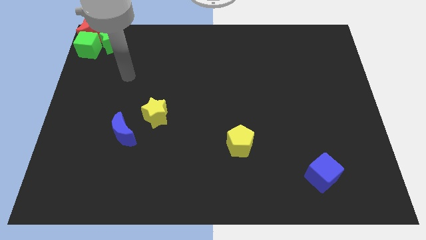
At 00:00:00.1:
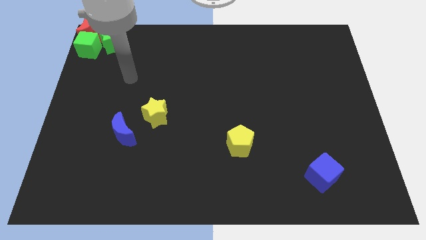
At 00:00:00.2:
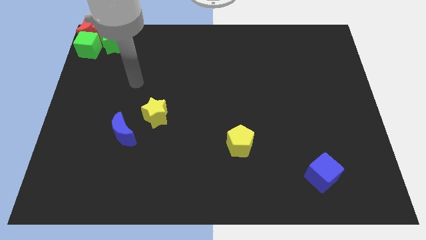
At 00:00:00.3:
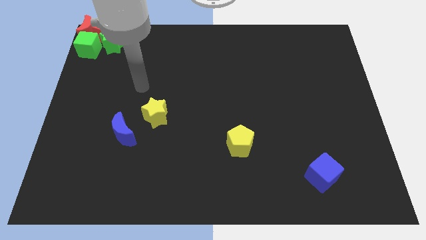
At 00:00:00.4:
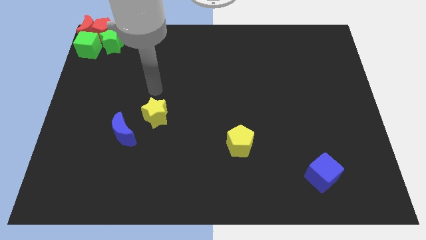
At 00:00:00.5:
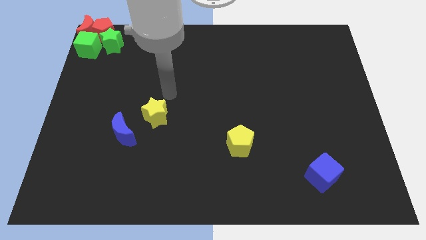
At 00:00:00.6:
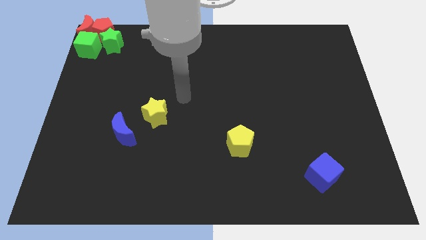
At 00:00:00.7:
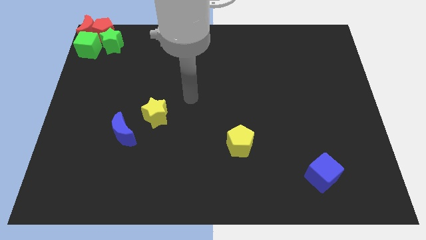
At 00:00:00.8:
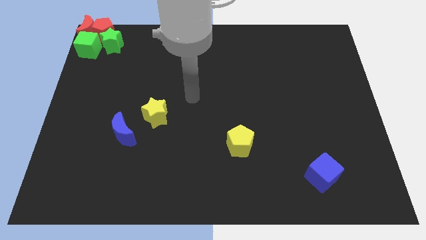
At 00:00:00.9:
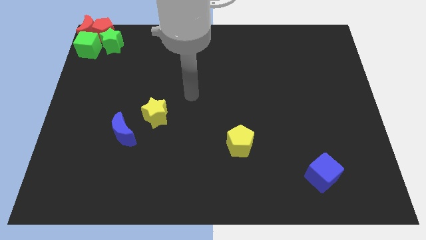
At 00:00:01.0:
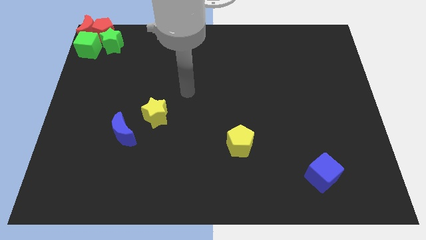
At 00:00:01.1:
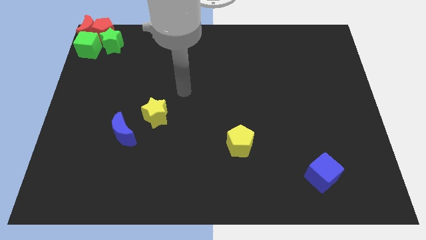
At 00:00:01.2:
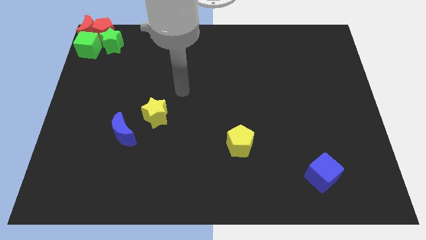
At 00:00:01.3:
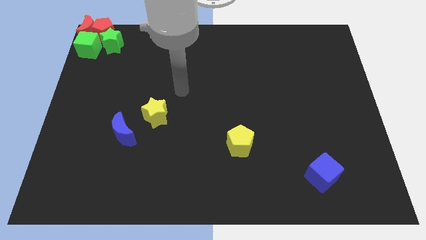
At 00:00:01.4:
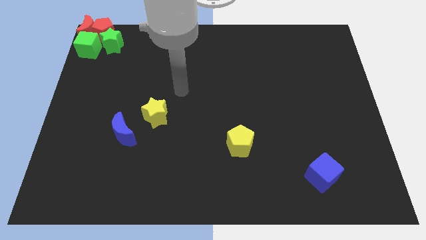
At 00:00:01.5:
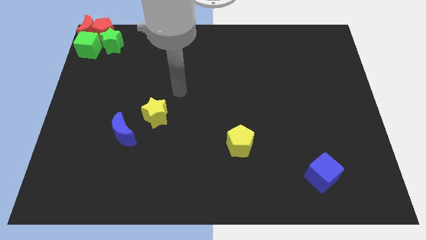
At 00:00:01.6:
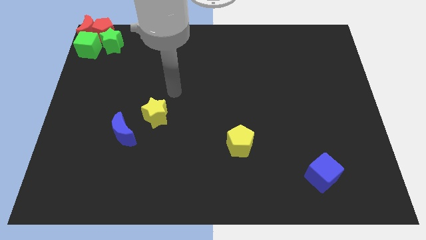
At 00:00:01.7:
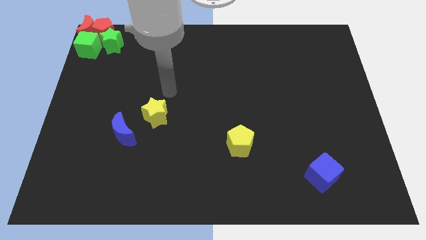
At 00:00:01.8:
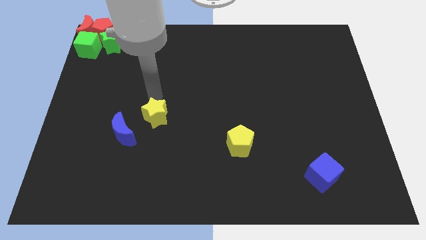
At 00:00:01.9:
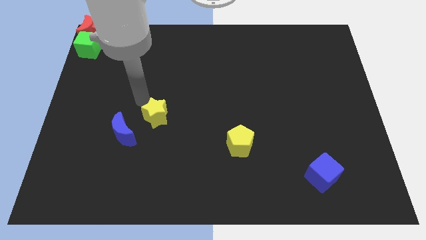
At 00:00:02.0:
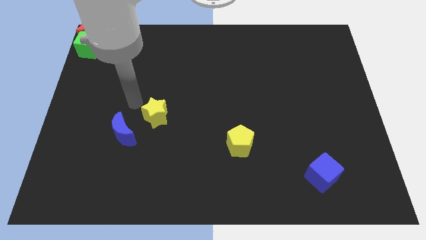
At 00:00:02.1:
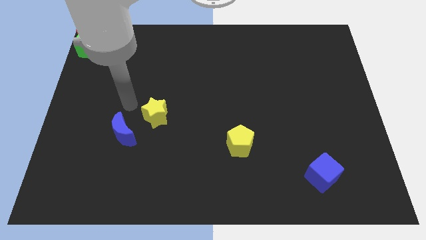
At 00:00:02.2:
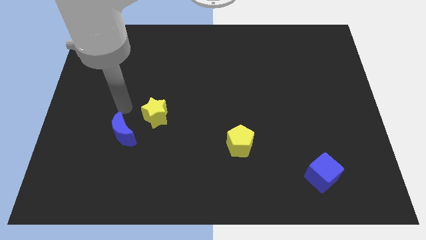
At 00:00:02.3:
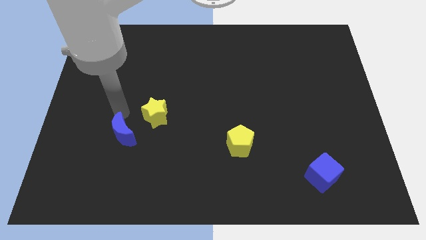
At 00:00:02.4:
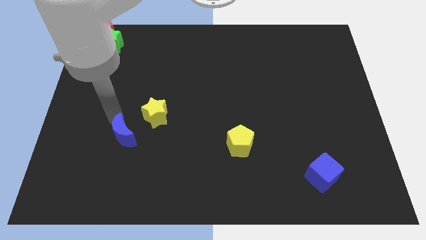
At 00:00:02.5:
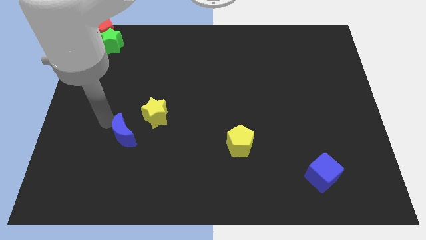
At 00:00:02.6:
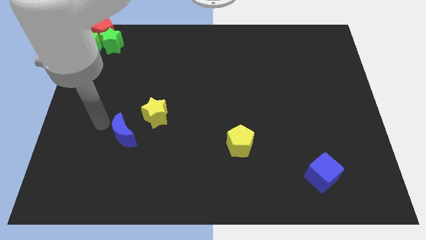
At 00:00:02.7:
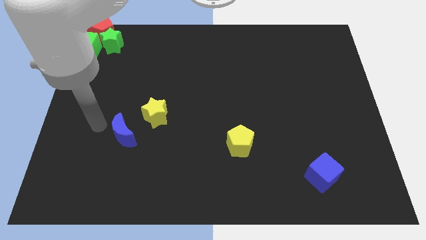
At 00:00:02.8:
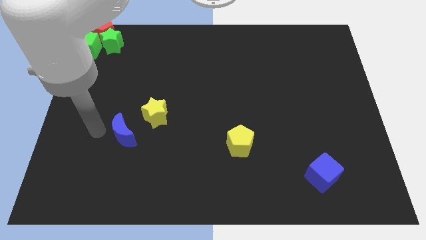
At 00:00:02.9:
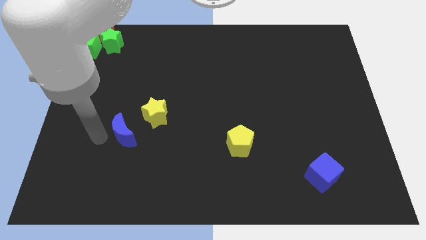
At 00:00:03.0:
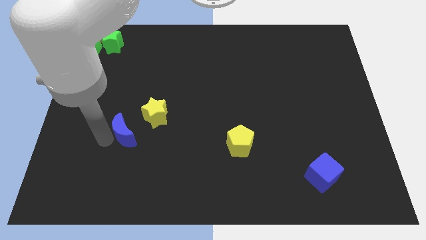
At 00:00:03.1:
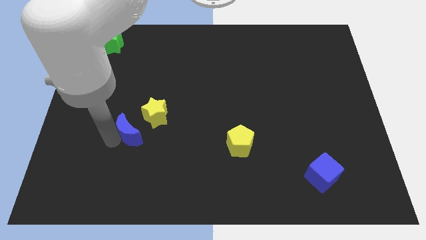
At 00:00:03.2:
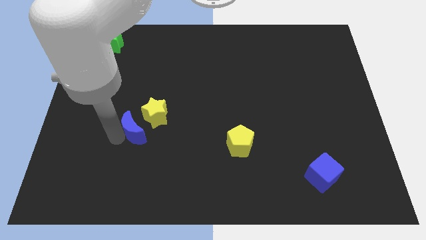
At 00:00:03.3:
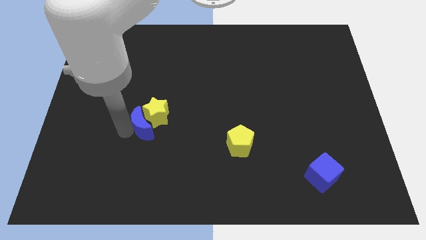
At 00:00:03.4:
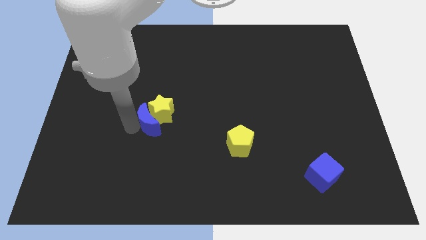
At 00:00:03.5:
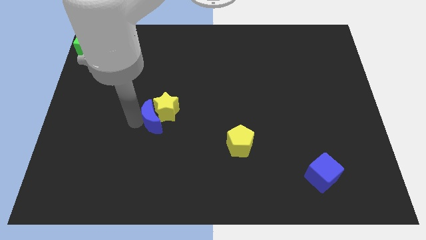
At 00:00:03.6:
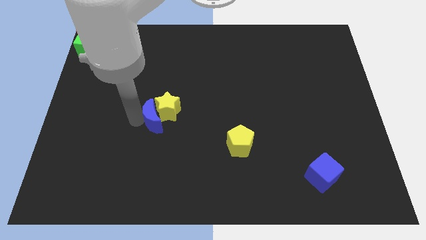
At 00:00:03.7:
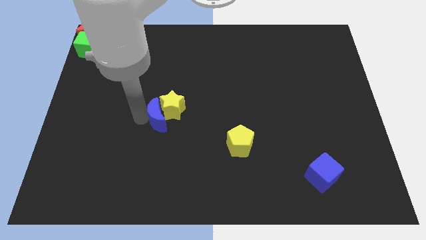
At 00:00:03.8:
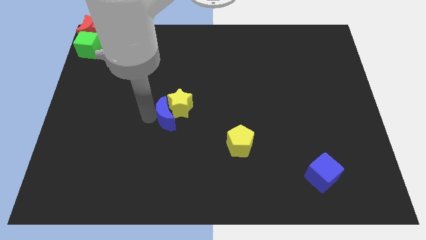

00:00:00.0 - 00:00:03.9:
slide the blue moon into the yellow star

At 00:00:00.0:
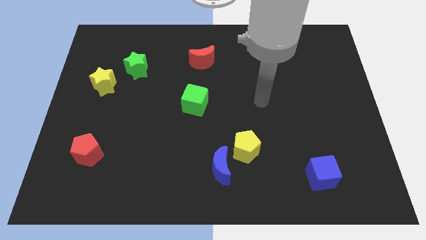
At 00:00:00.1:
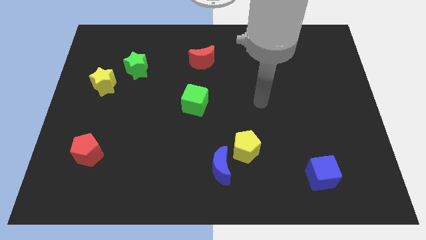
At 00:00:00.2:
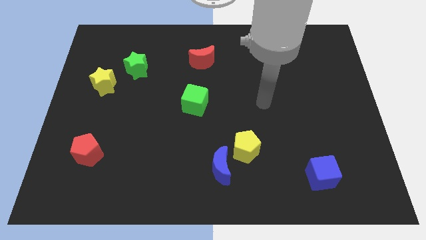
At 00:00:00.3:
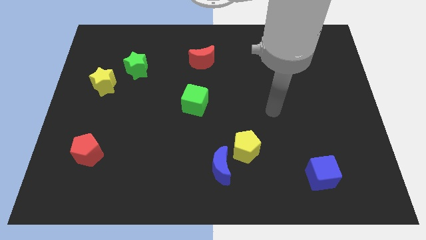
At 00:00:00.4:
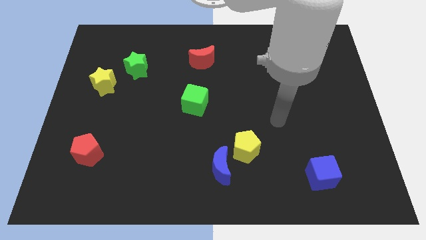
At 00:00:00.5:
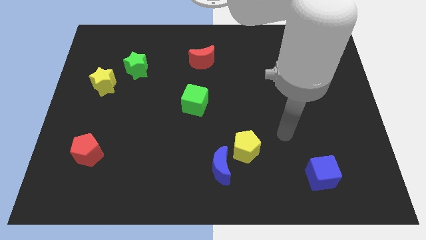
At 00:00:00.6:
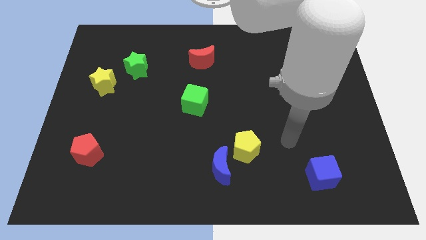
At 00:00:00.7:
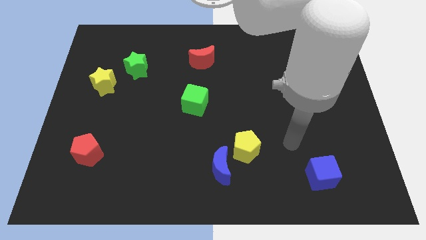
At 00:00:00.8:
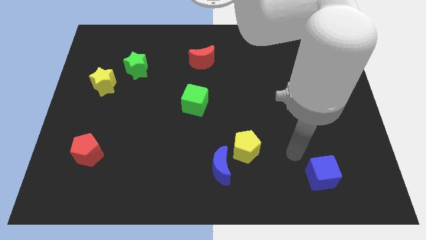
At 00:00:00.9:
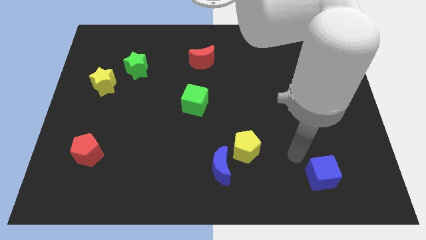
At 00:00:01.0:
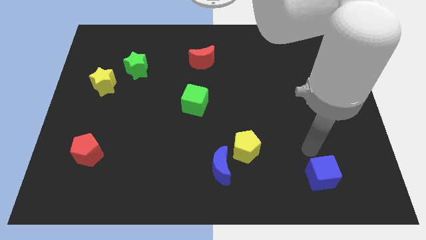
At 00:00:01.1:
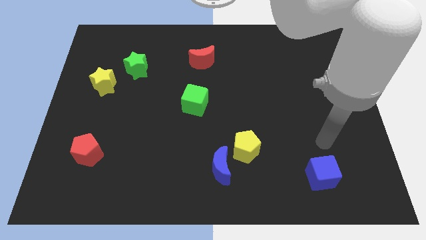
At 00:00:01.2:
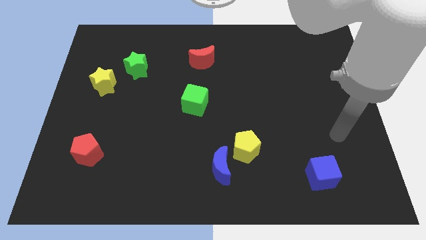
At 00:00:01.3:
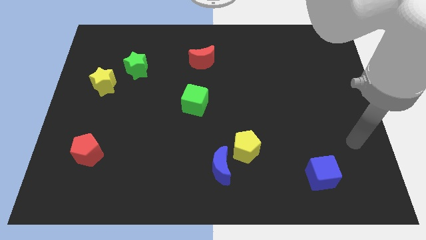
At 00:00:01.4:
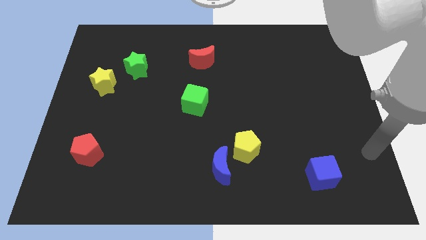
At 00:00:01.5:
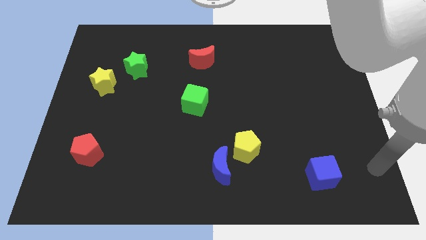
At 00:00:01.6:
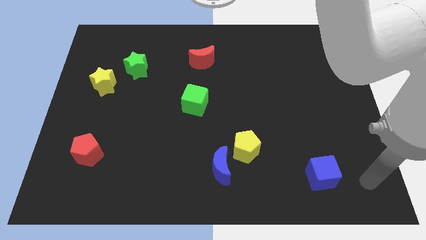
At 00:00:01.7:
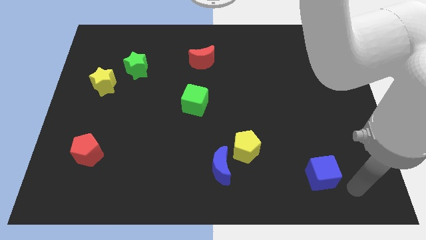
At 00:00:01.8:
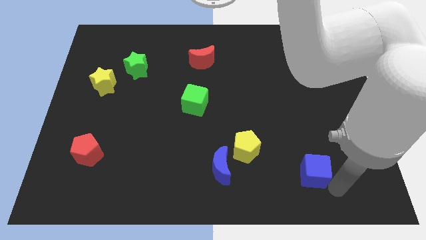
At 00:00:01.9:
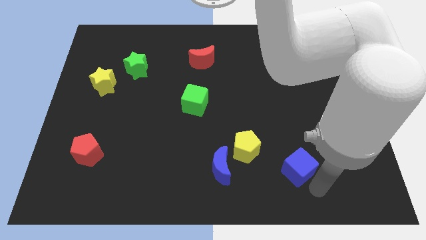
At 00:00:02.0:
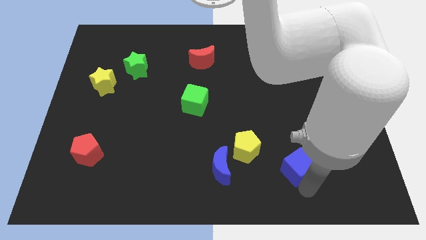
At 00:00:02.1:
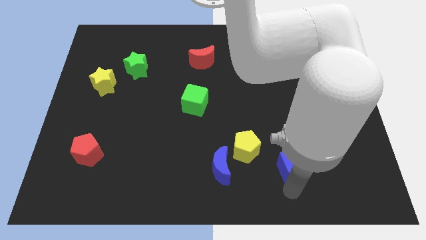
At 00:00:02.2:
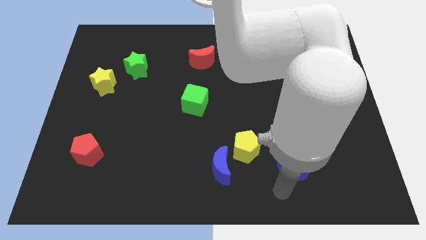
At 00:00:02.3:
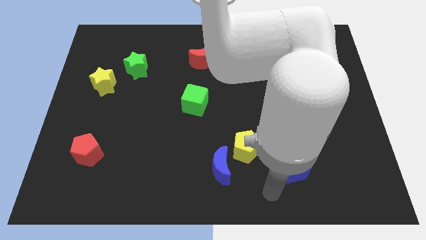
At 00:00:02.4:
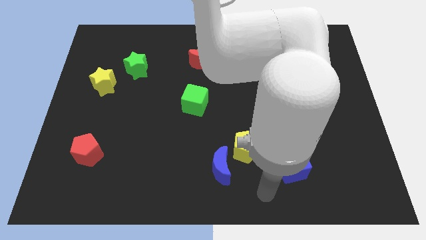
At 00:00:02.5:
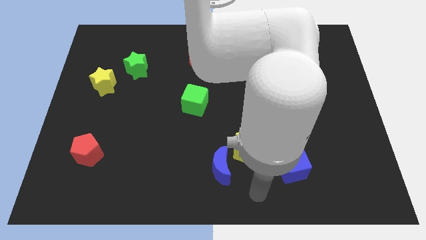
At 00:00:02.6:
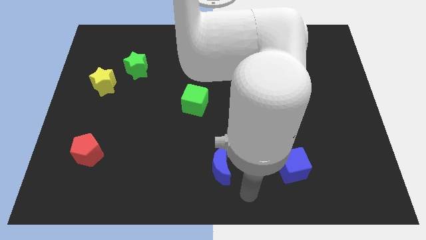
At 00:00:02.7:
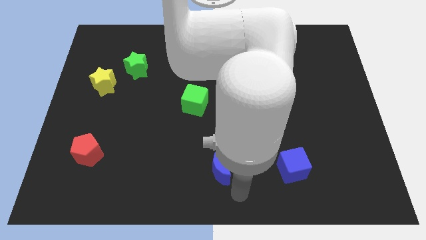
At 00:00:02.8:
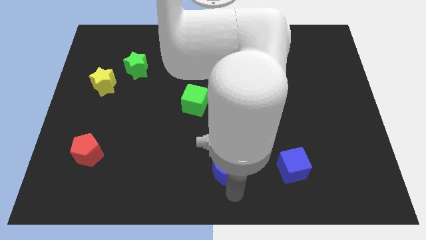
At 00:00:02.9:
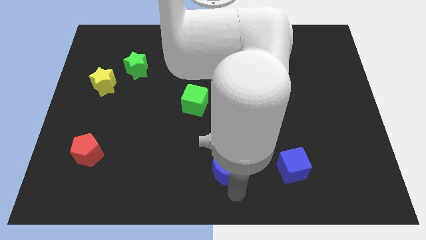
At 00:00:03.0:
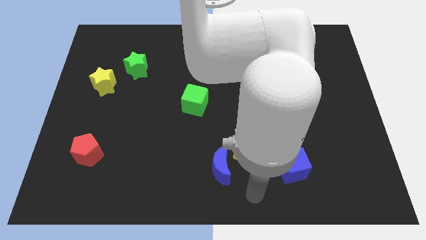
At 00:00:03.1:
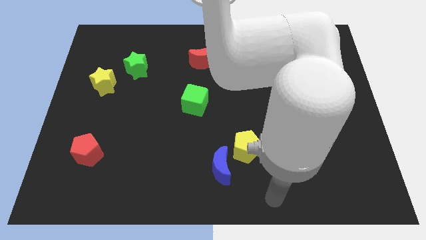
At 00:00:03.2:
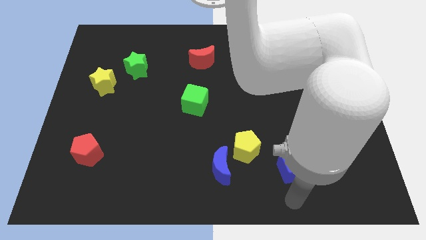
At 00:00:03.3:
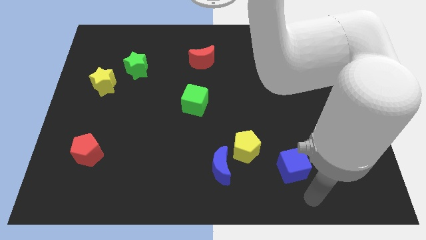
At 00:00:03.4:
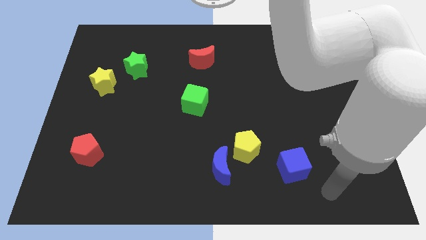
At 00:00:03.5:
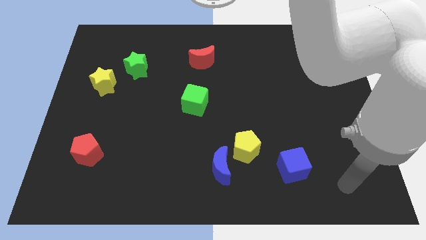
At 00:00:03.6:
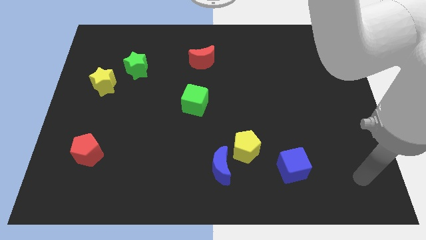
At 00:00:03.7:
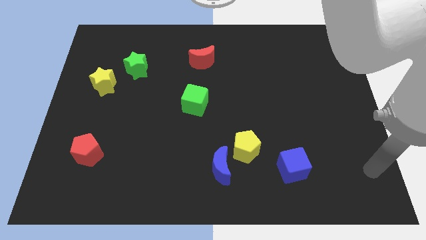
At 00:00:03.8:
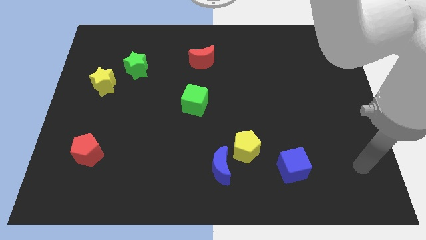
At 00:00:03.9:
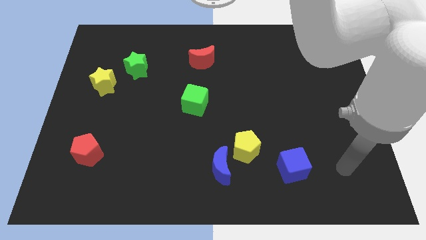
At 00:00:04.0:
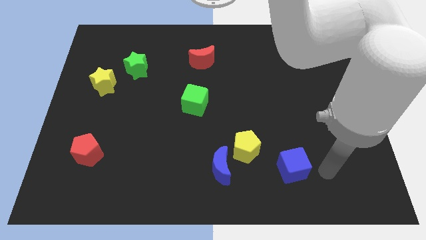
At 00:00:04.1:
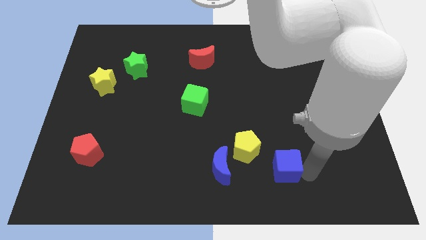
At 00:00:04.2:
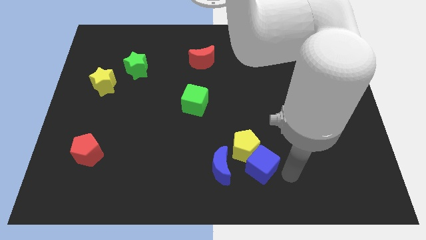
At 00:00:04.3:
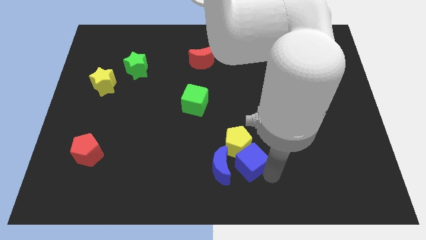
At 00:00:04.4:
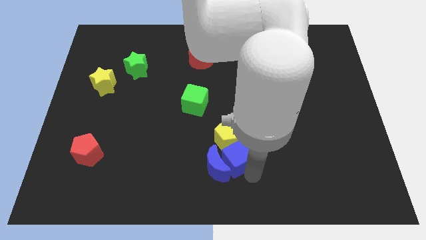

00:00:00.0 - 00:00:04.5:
push the blue cube right to the blue moon

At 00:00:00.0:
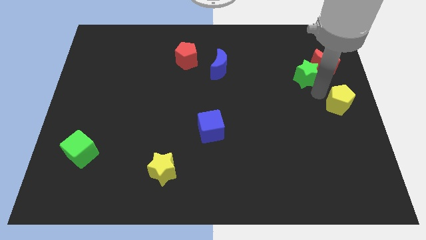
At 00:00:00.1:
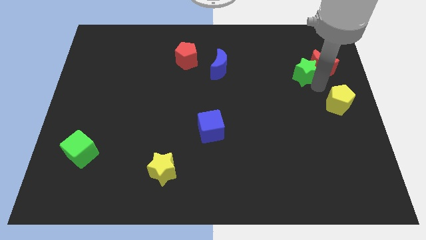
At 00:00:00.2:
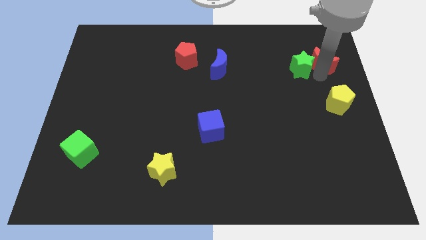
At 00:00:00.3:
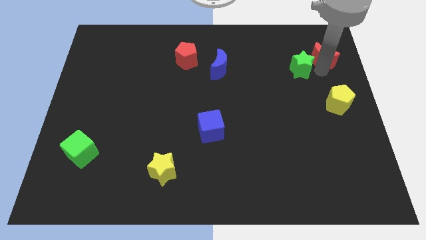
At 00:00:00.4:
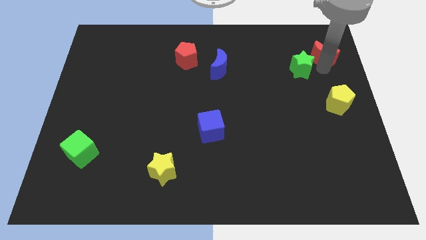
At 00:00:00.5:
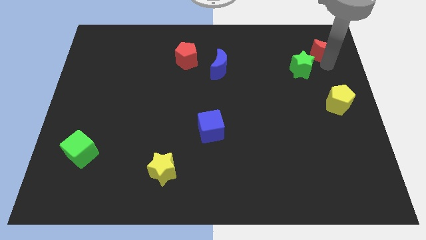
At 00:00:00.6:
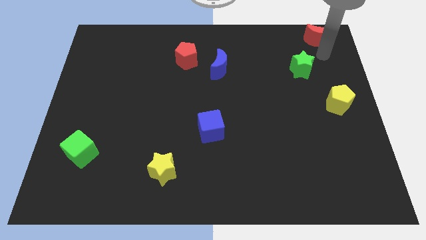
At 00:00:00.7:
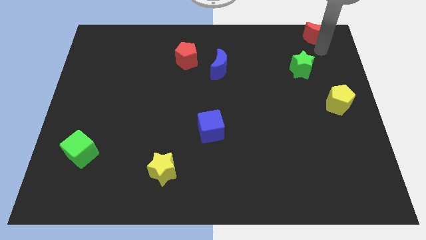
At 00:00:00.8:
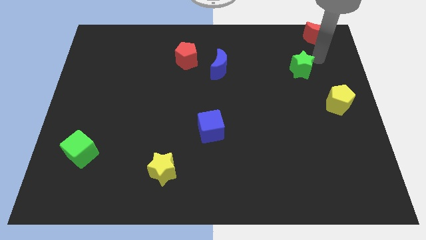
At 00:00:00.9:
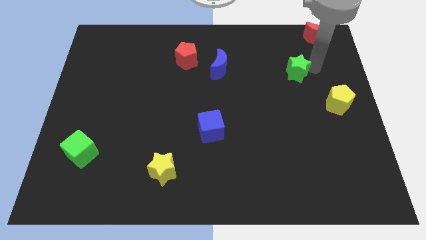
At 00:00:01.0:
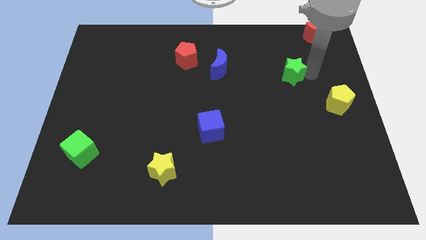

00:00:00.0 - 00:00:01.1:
separate green star and red moon from each other
